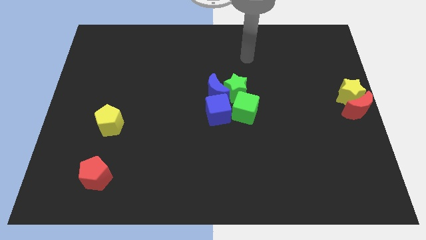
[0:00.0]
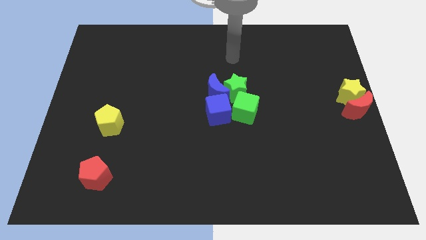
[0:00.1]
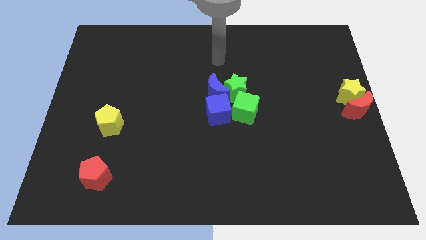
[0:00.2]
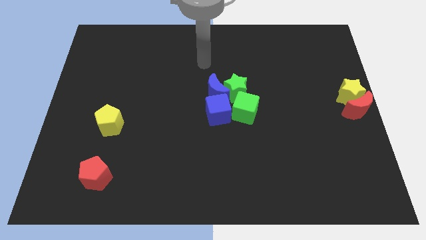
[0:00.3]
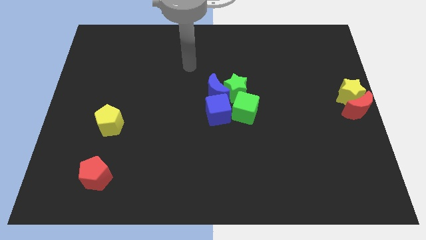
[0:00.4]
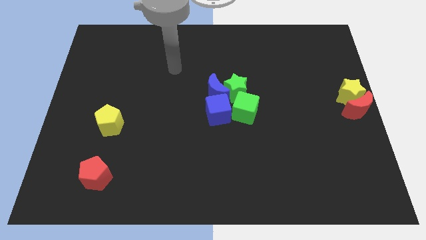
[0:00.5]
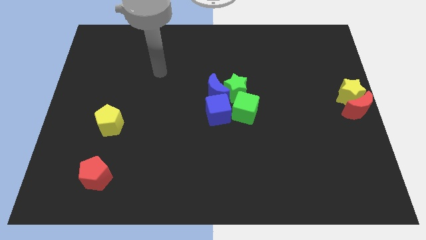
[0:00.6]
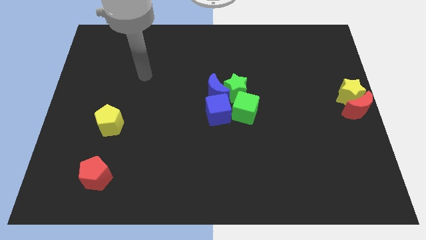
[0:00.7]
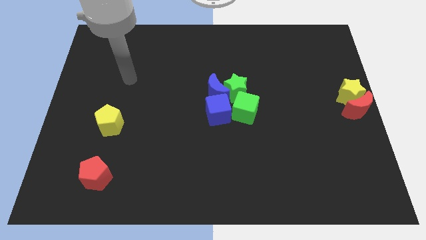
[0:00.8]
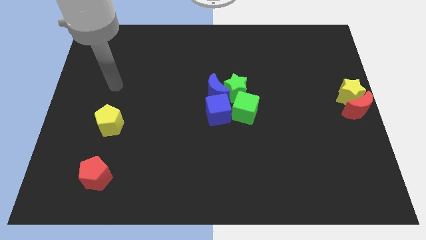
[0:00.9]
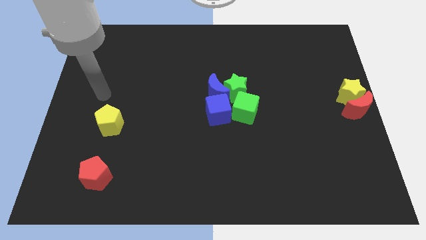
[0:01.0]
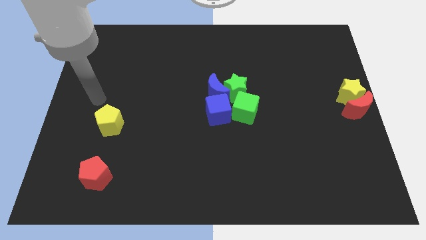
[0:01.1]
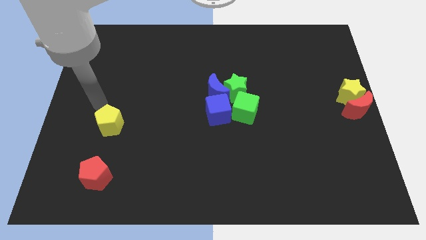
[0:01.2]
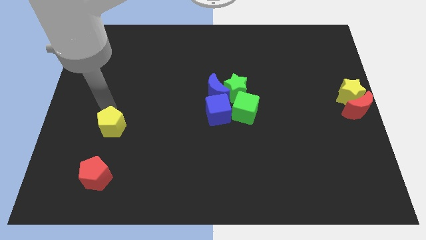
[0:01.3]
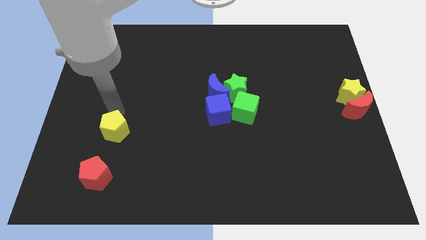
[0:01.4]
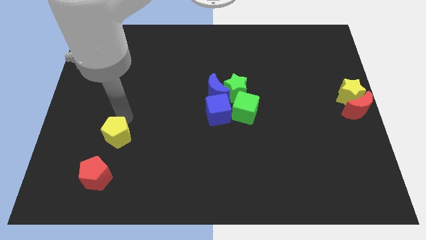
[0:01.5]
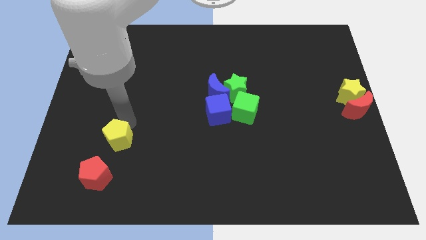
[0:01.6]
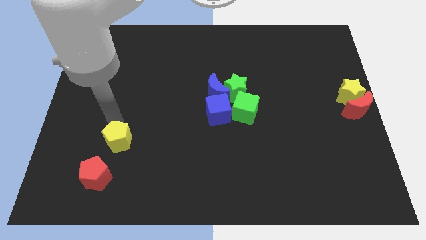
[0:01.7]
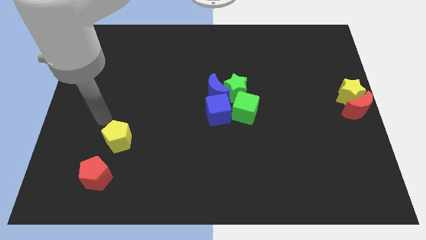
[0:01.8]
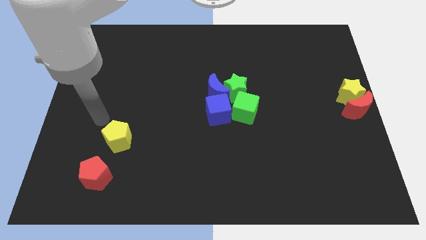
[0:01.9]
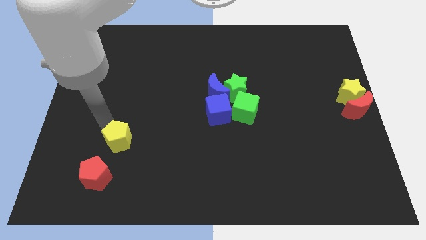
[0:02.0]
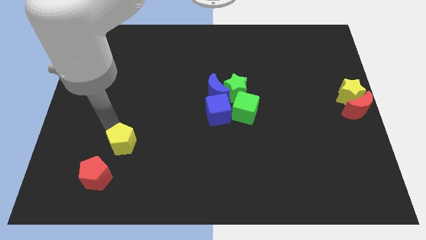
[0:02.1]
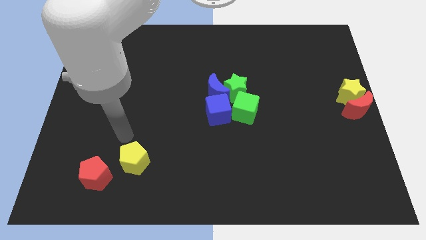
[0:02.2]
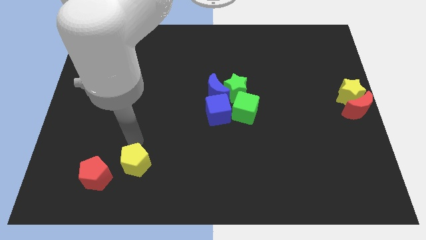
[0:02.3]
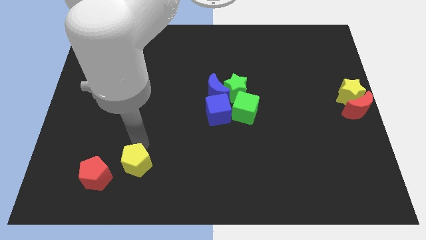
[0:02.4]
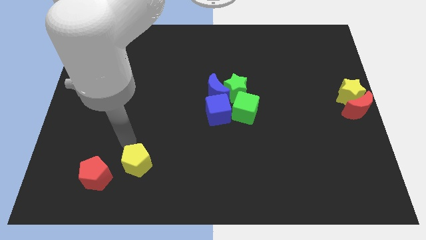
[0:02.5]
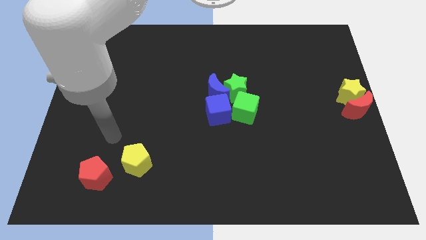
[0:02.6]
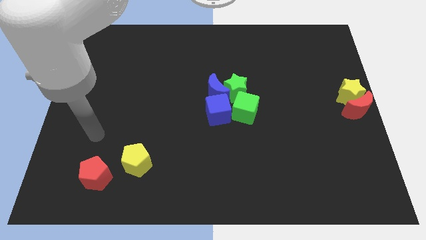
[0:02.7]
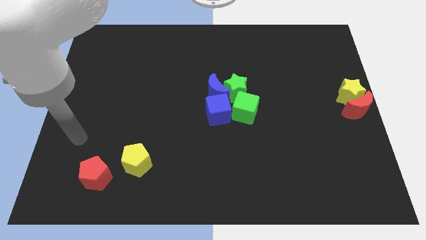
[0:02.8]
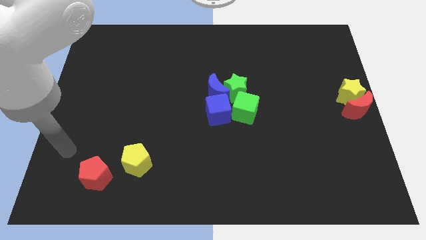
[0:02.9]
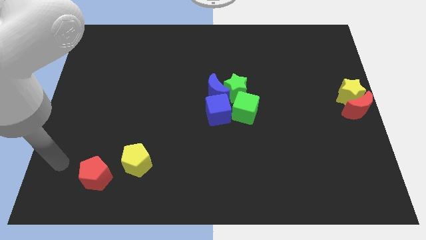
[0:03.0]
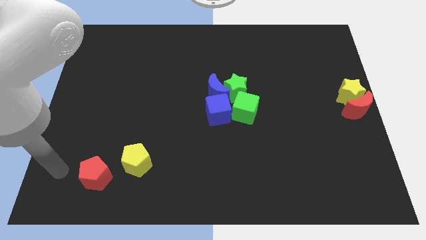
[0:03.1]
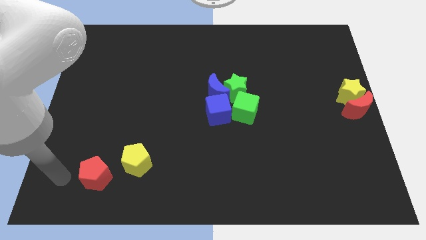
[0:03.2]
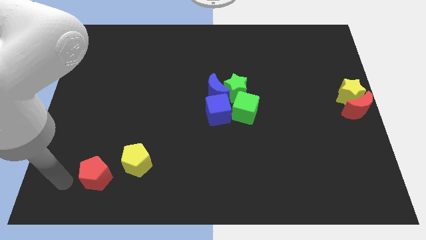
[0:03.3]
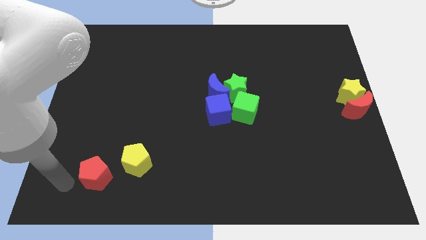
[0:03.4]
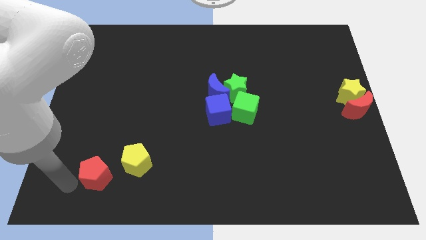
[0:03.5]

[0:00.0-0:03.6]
move the yellow pentagon diagonally top right to red pentagon

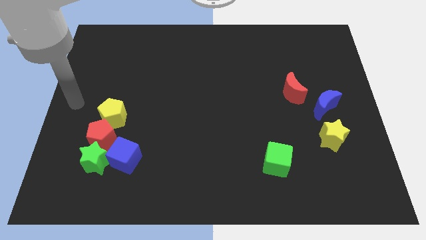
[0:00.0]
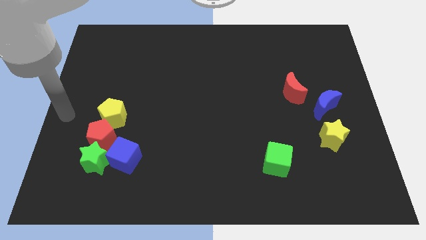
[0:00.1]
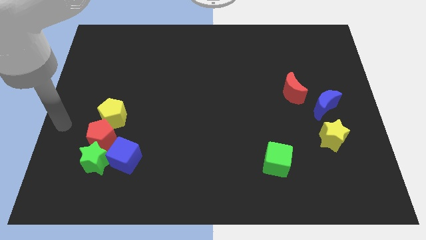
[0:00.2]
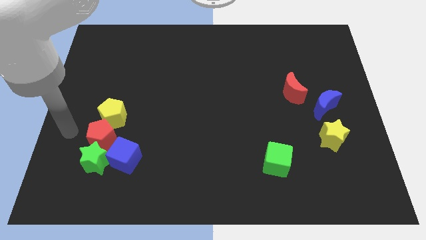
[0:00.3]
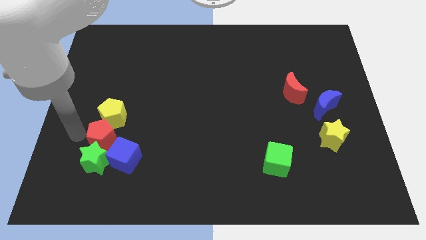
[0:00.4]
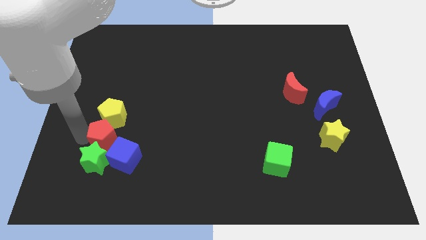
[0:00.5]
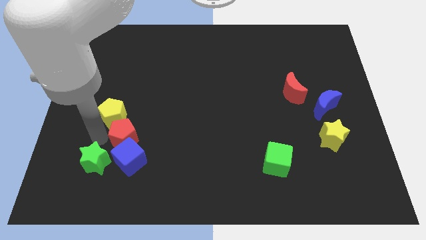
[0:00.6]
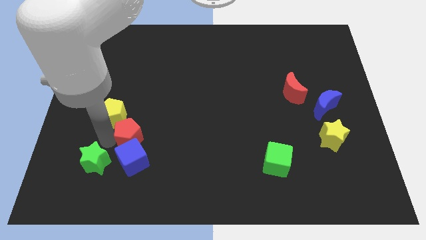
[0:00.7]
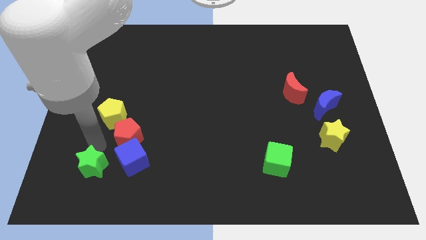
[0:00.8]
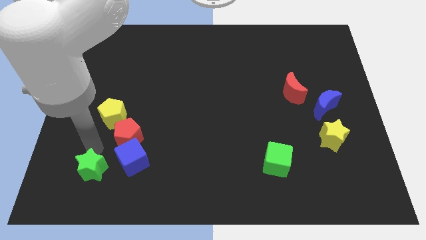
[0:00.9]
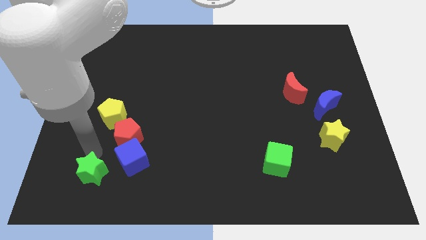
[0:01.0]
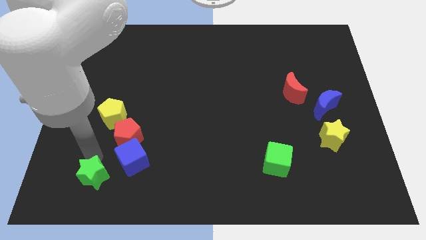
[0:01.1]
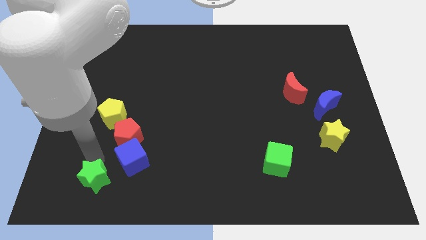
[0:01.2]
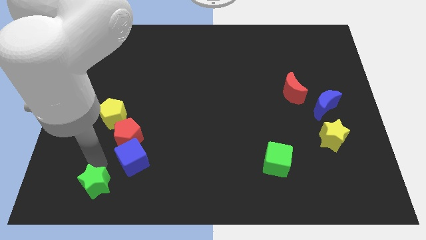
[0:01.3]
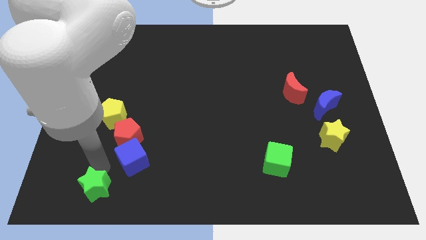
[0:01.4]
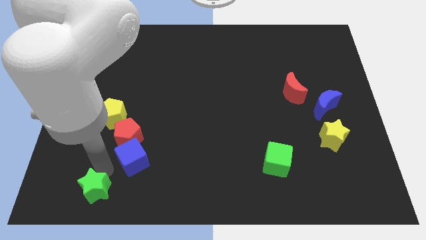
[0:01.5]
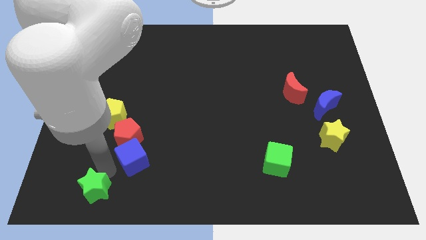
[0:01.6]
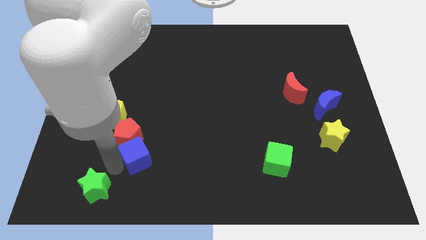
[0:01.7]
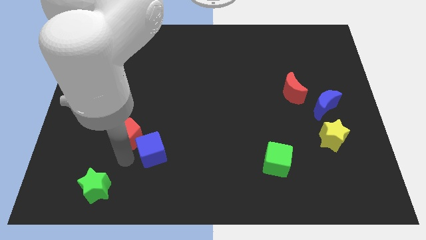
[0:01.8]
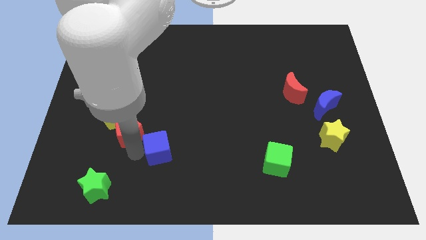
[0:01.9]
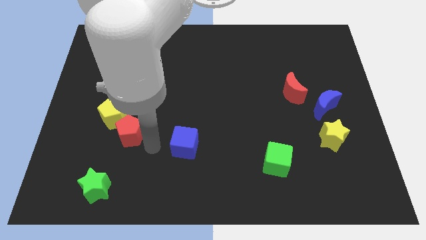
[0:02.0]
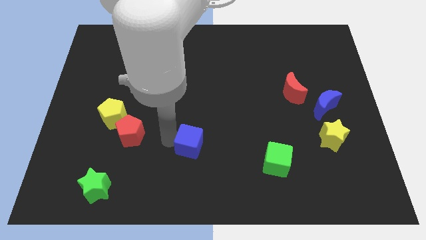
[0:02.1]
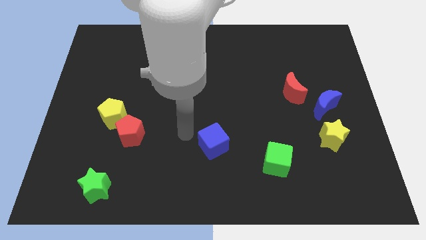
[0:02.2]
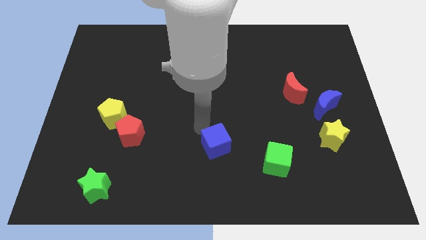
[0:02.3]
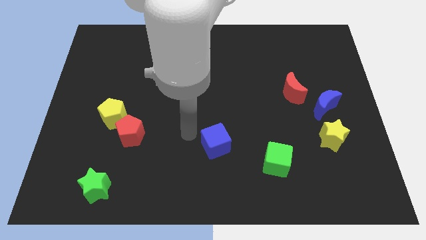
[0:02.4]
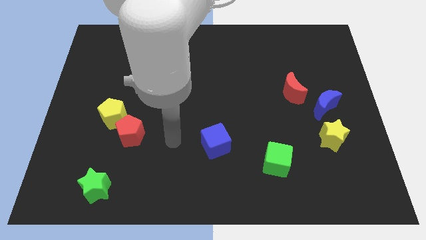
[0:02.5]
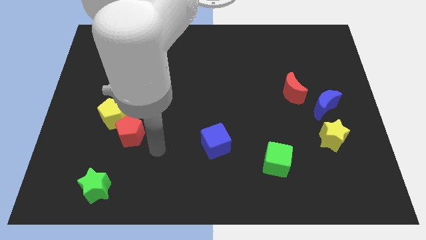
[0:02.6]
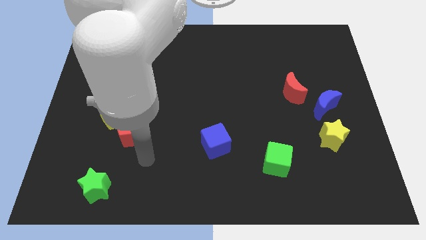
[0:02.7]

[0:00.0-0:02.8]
place the blue cube right to the red pentagon

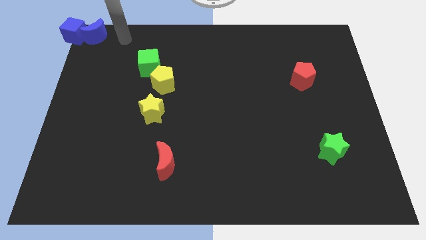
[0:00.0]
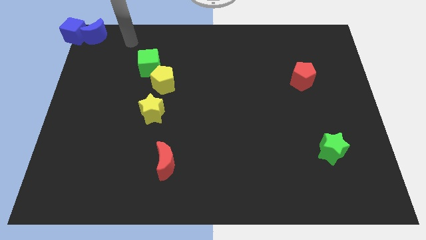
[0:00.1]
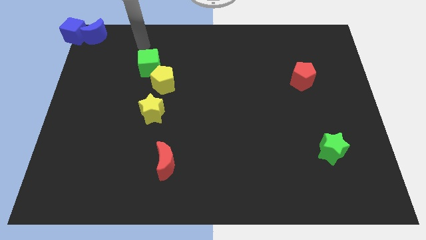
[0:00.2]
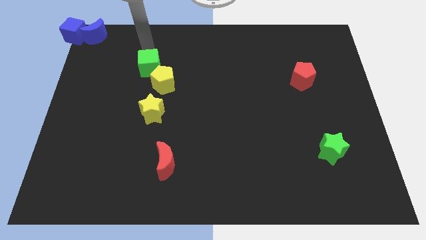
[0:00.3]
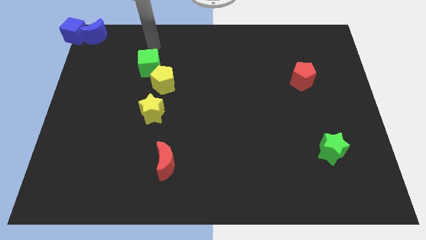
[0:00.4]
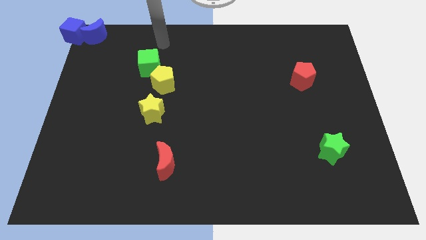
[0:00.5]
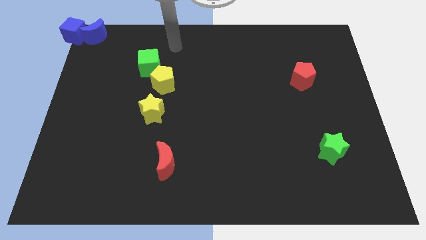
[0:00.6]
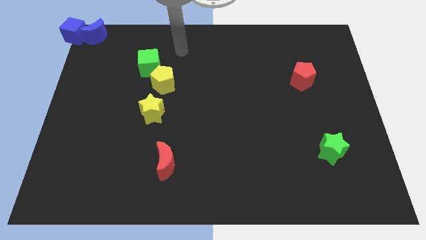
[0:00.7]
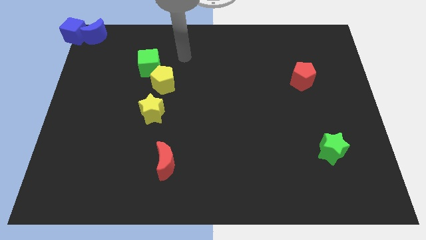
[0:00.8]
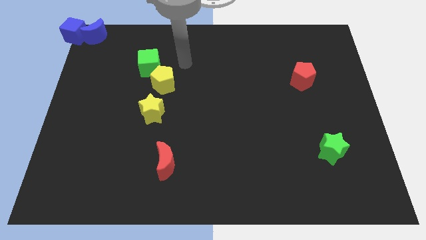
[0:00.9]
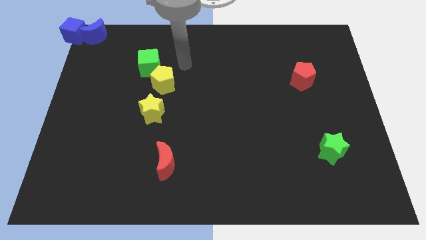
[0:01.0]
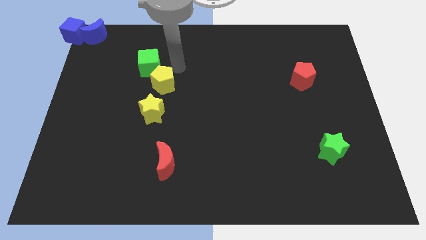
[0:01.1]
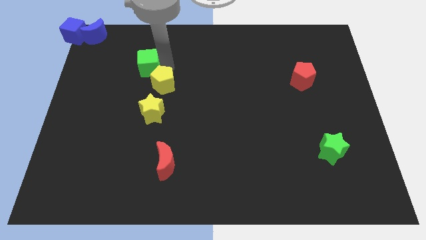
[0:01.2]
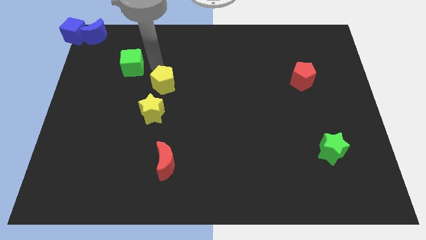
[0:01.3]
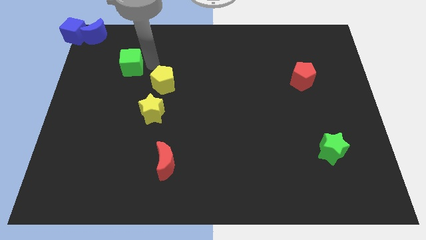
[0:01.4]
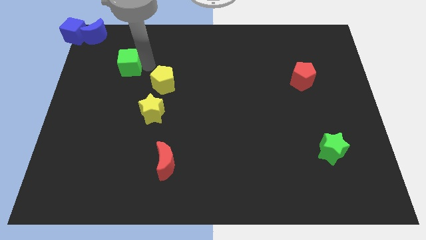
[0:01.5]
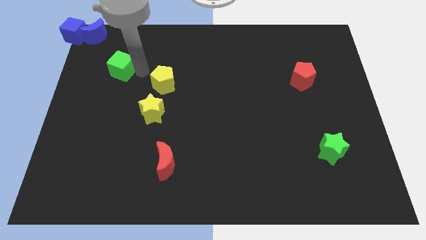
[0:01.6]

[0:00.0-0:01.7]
move the arm towards right to the green cube

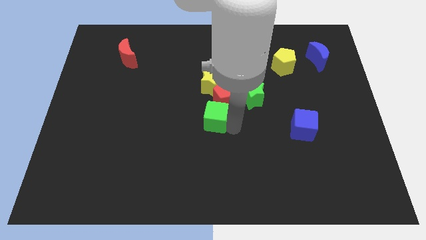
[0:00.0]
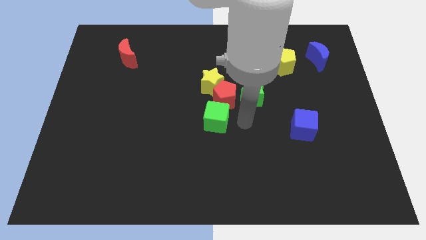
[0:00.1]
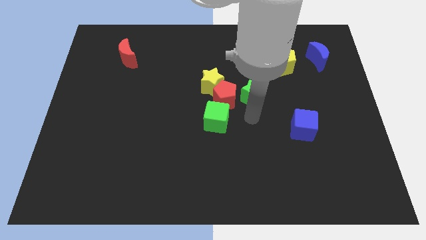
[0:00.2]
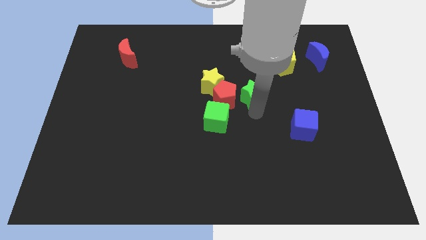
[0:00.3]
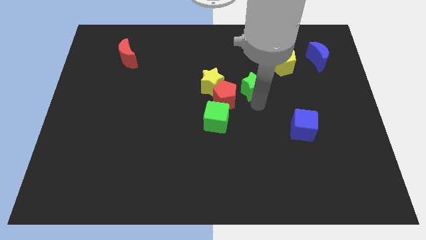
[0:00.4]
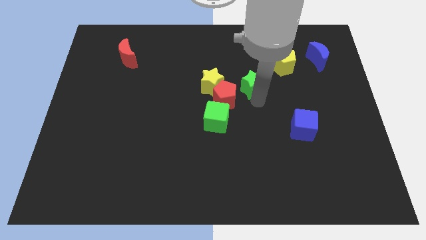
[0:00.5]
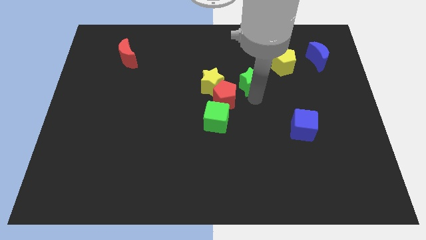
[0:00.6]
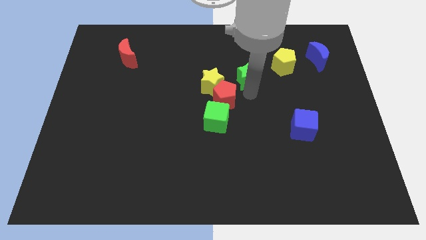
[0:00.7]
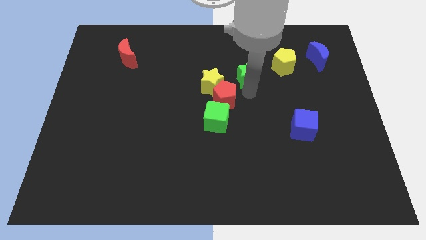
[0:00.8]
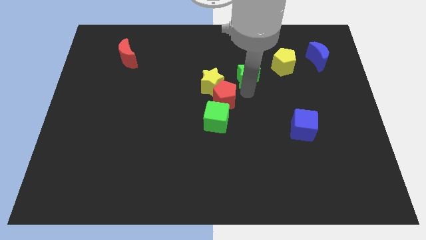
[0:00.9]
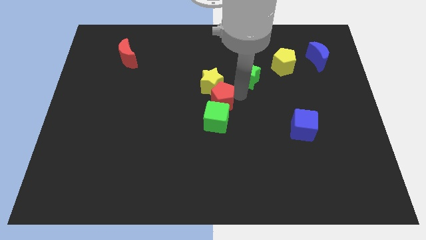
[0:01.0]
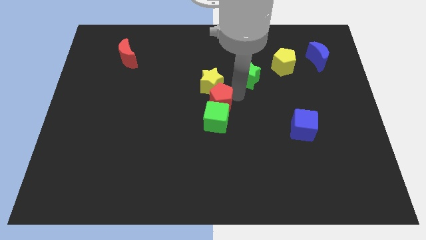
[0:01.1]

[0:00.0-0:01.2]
place green star to the right of yellow star
